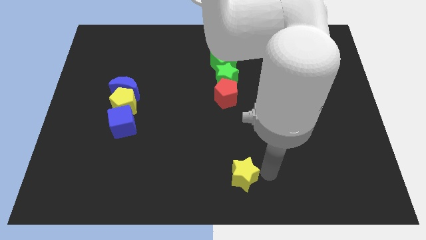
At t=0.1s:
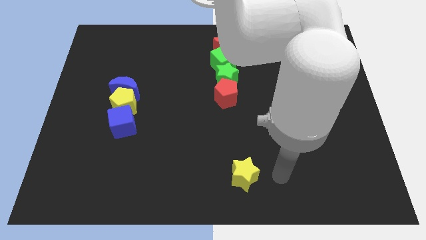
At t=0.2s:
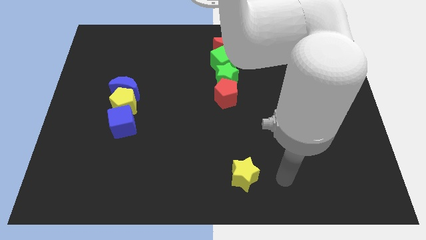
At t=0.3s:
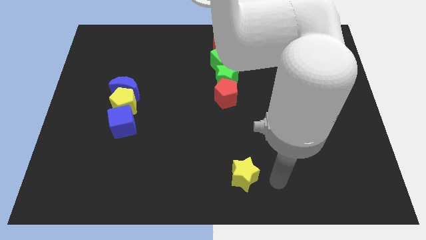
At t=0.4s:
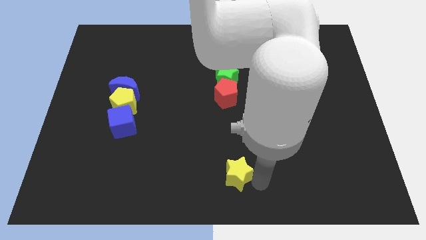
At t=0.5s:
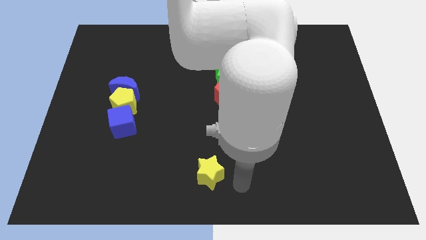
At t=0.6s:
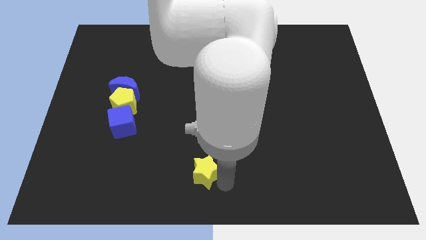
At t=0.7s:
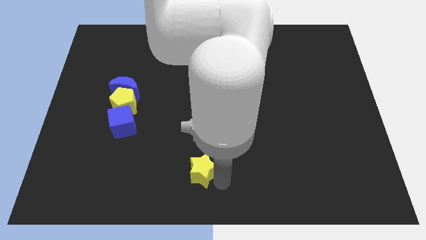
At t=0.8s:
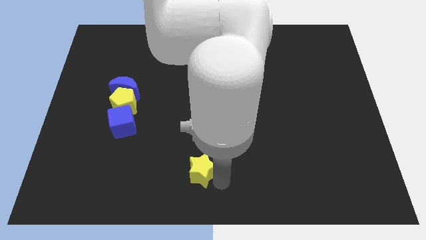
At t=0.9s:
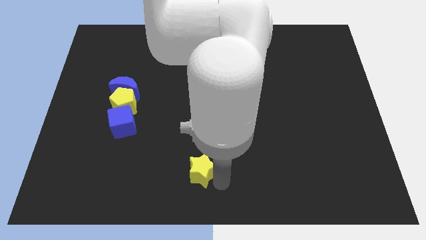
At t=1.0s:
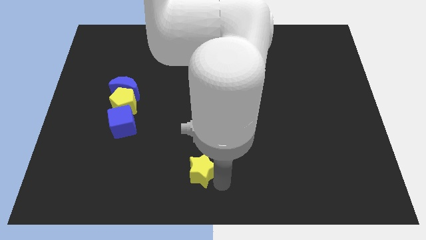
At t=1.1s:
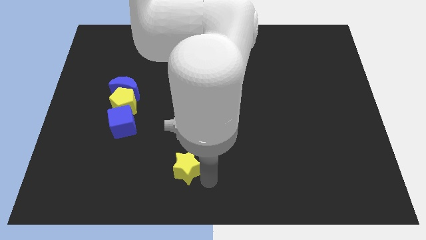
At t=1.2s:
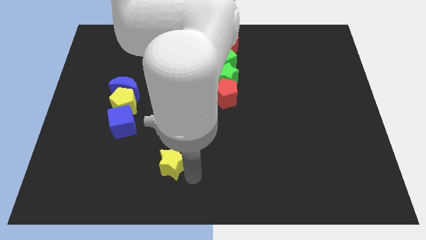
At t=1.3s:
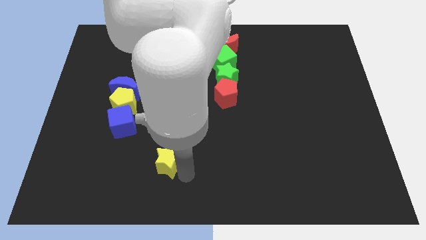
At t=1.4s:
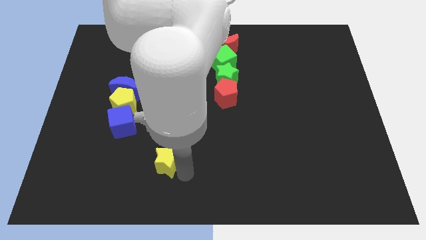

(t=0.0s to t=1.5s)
slightly push the yellow star towards the left side of the board

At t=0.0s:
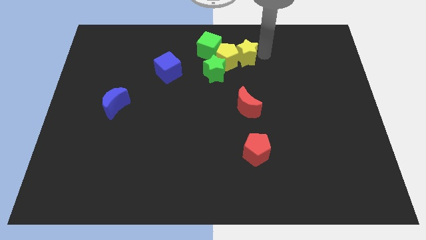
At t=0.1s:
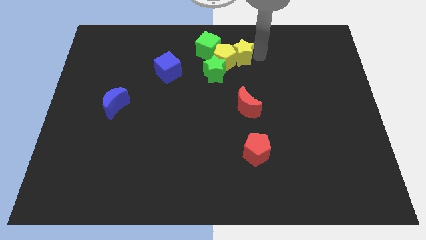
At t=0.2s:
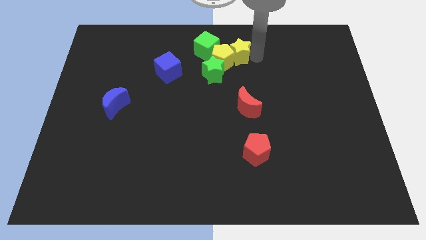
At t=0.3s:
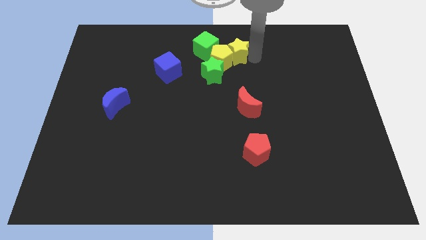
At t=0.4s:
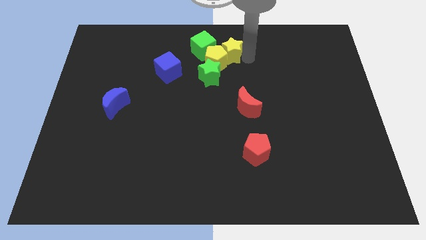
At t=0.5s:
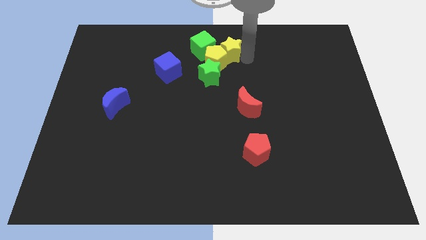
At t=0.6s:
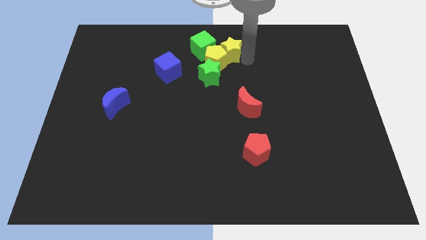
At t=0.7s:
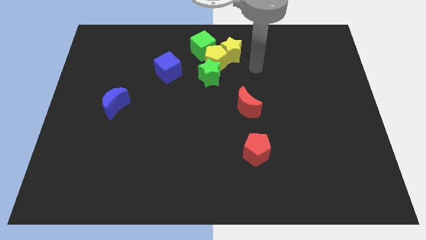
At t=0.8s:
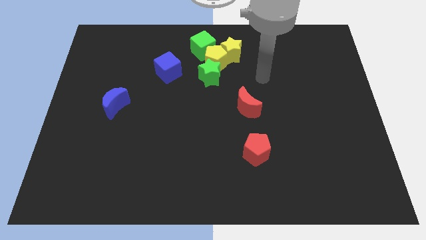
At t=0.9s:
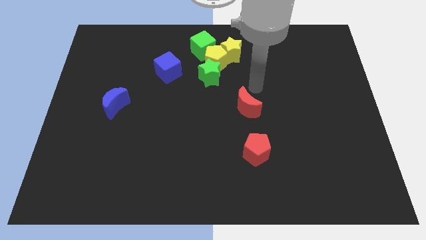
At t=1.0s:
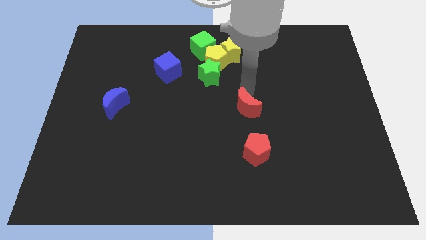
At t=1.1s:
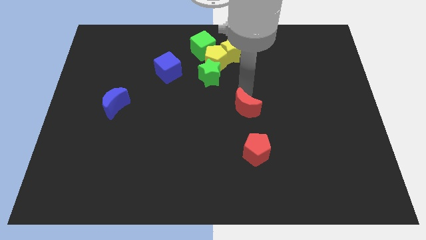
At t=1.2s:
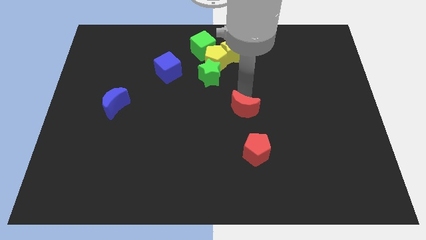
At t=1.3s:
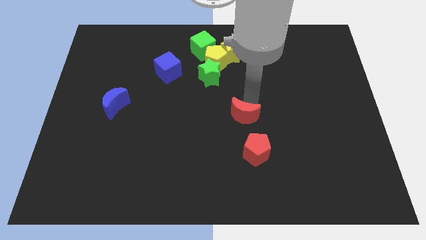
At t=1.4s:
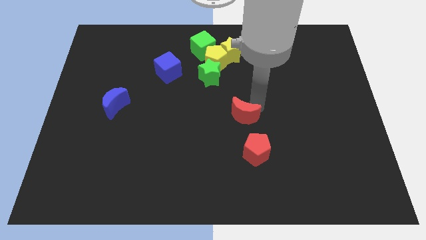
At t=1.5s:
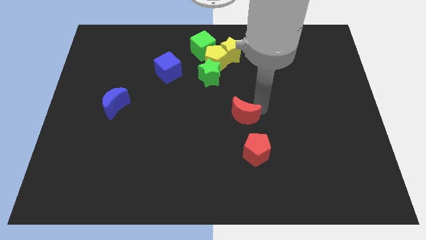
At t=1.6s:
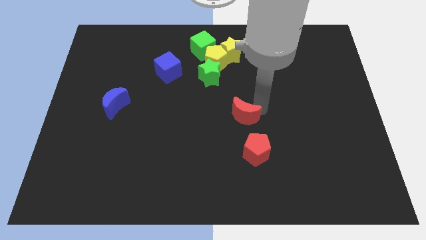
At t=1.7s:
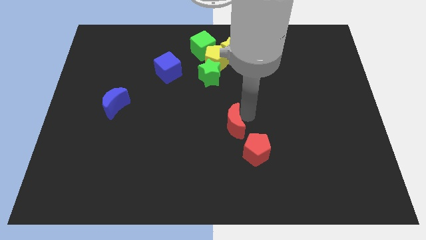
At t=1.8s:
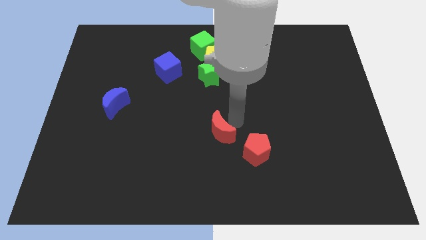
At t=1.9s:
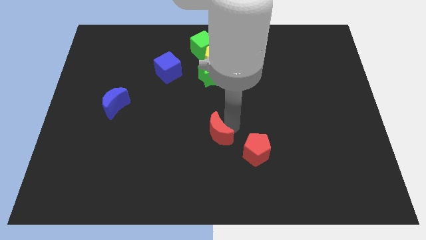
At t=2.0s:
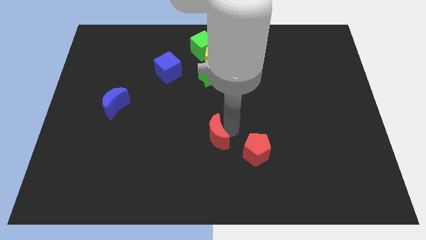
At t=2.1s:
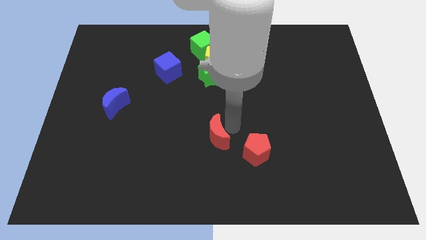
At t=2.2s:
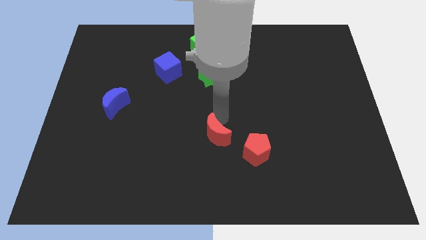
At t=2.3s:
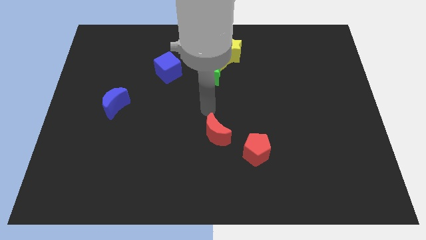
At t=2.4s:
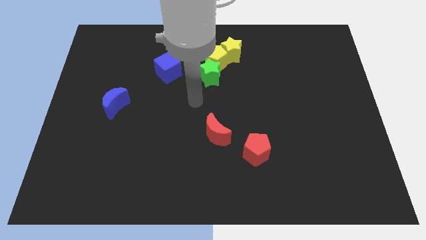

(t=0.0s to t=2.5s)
move the red moon left to the red pentagon

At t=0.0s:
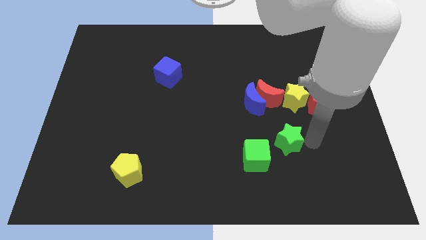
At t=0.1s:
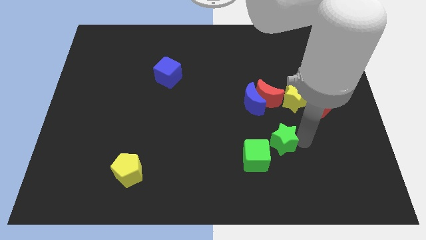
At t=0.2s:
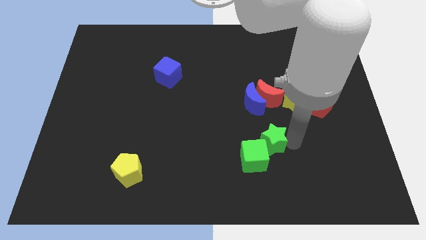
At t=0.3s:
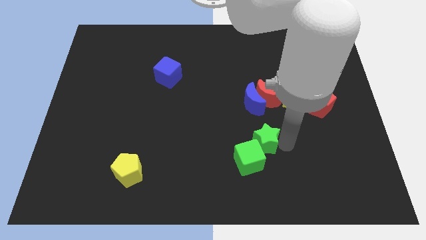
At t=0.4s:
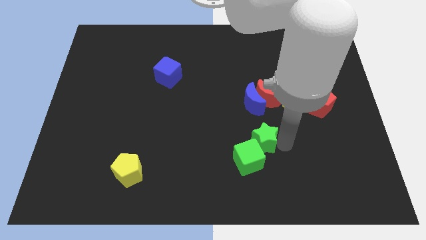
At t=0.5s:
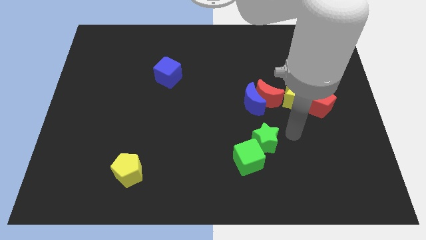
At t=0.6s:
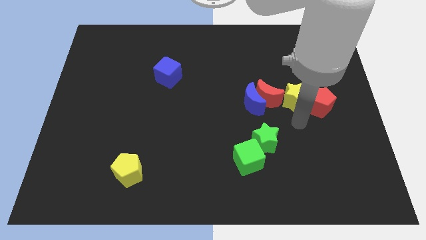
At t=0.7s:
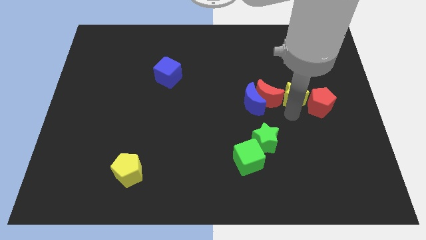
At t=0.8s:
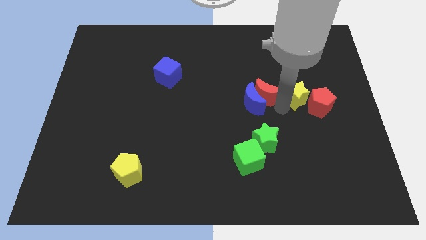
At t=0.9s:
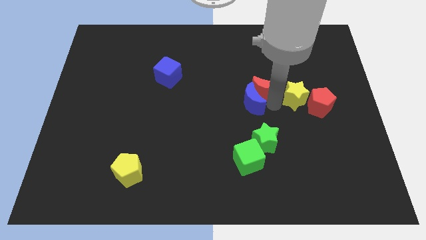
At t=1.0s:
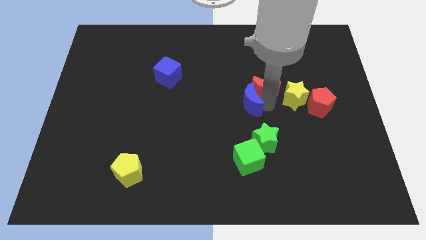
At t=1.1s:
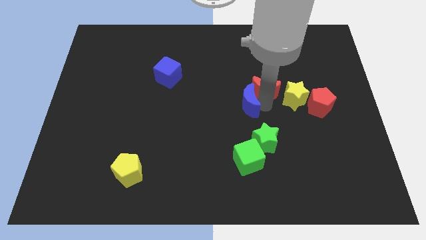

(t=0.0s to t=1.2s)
move the green star close to the green cube

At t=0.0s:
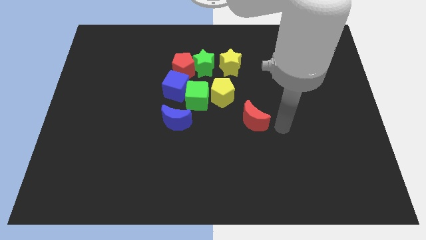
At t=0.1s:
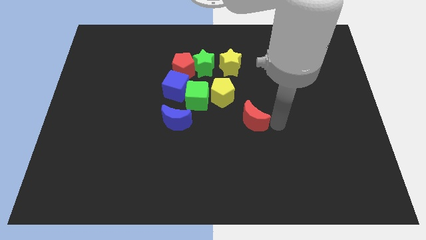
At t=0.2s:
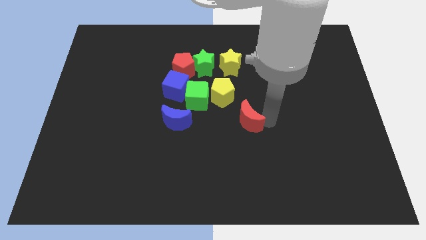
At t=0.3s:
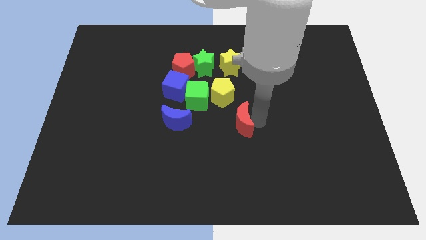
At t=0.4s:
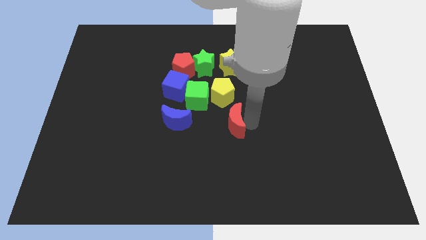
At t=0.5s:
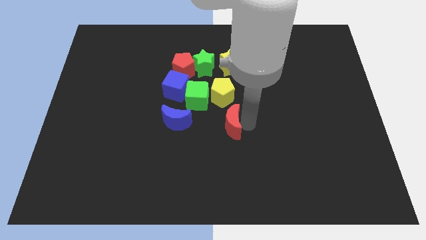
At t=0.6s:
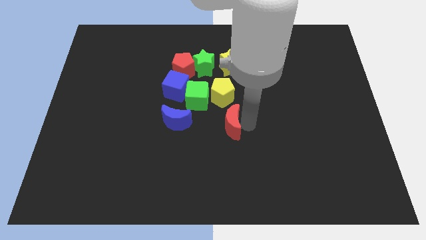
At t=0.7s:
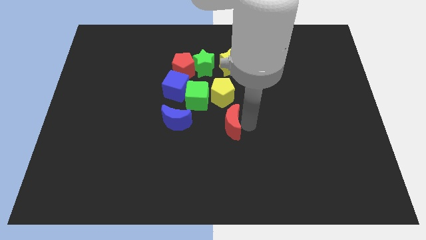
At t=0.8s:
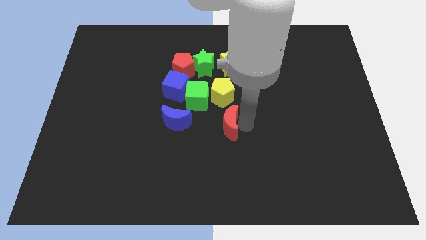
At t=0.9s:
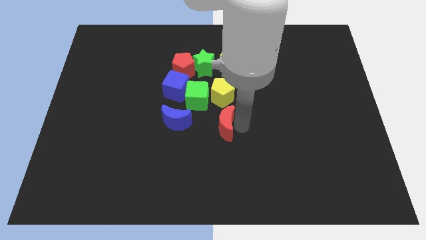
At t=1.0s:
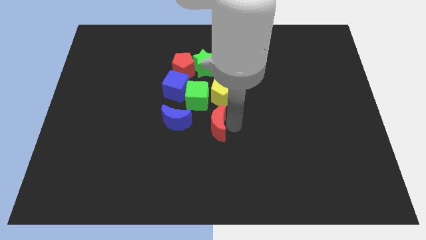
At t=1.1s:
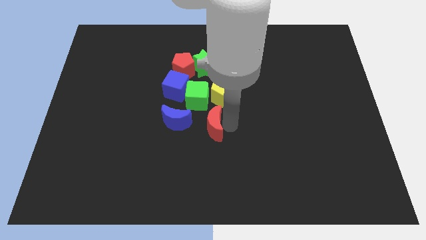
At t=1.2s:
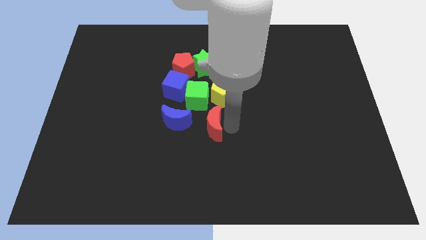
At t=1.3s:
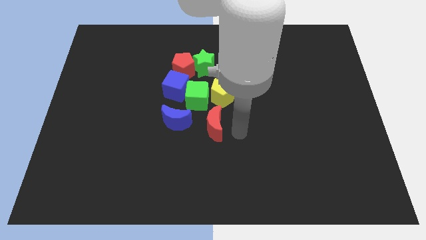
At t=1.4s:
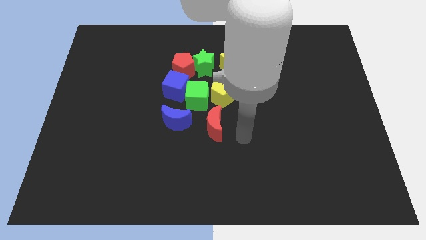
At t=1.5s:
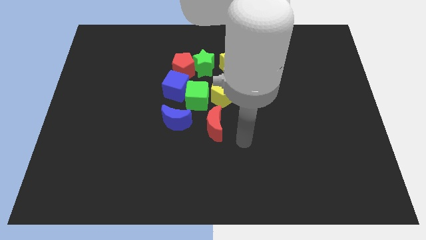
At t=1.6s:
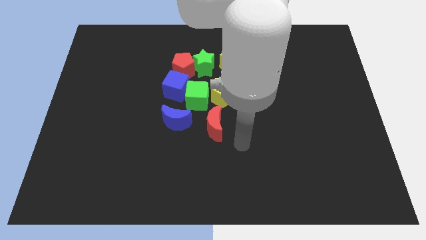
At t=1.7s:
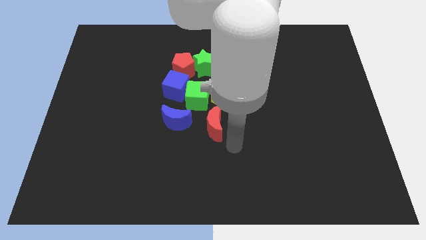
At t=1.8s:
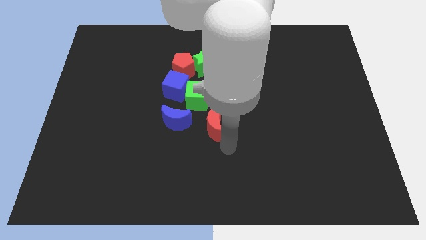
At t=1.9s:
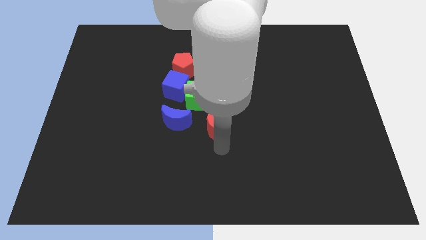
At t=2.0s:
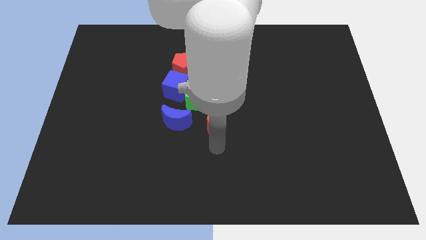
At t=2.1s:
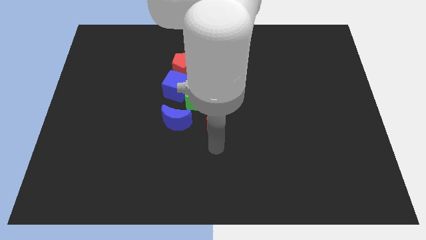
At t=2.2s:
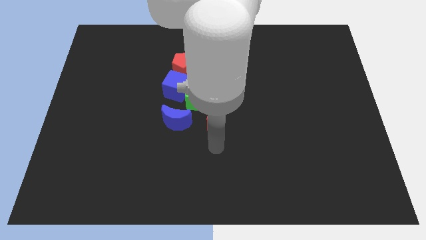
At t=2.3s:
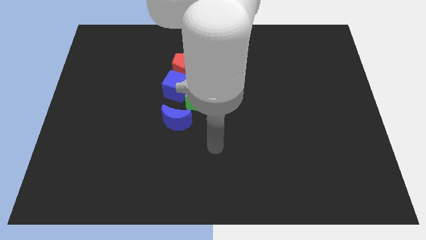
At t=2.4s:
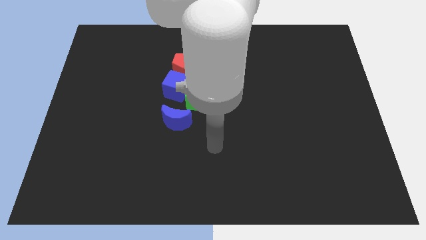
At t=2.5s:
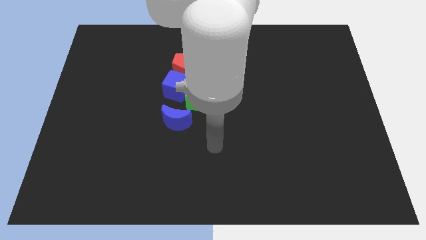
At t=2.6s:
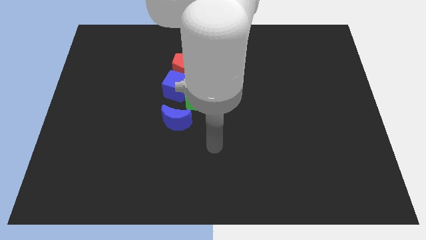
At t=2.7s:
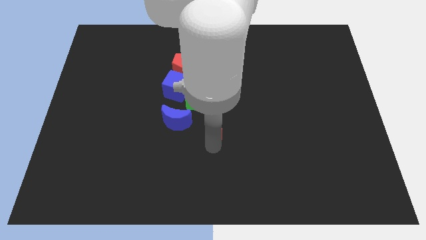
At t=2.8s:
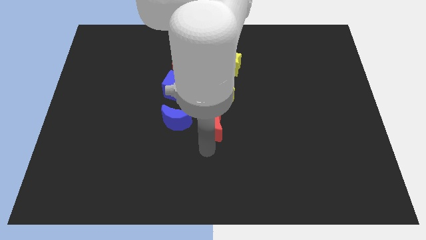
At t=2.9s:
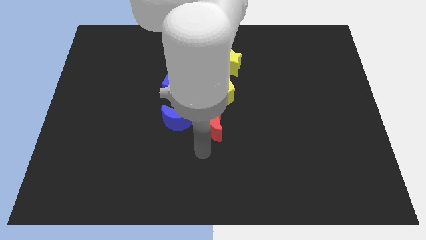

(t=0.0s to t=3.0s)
move the red moon below the yellow pentagon

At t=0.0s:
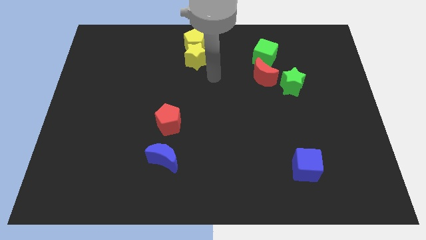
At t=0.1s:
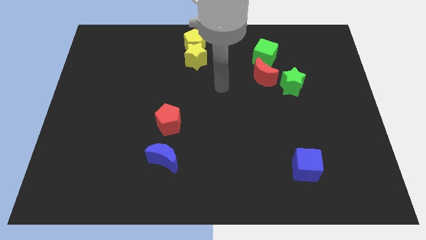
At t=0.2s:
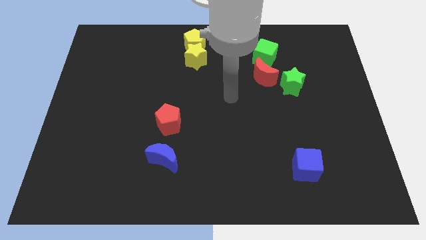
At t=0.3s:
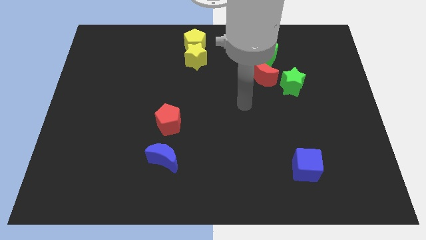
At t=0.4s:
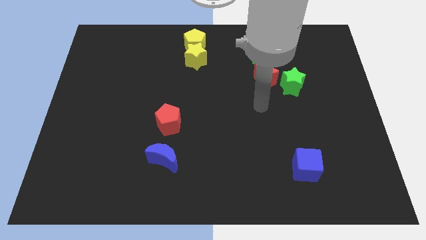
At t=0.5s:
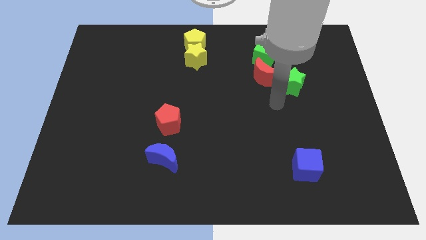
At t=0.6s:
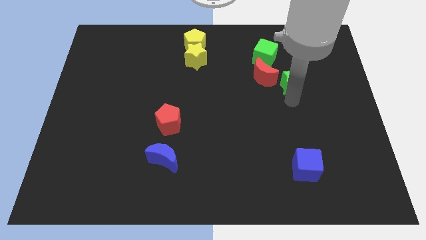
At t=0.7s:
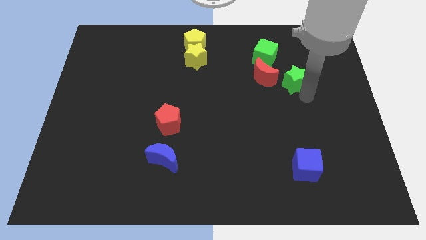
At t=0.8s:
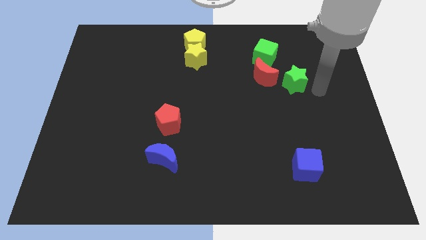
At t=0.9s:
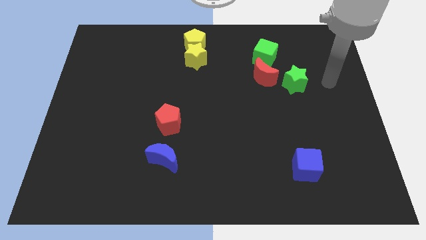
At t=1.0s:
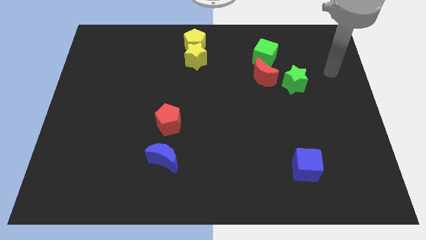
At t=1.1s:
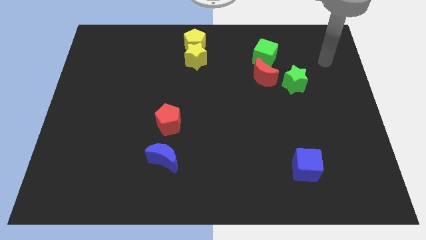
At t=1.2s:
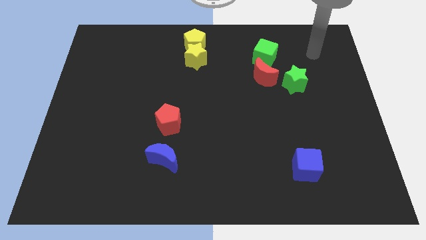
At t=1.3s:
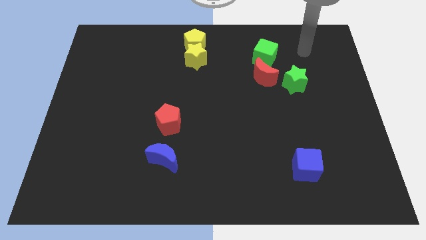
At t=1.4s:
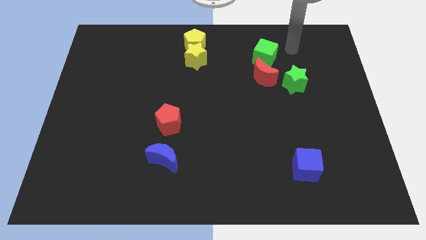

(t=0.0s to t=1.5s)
tap the green star
